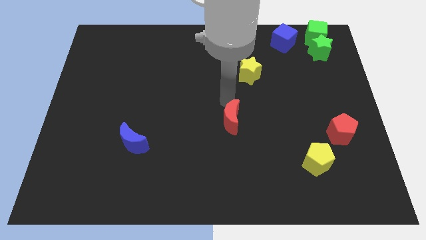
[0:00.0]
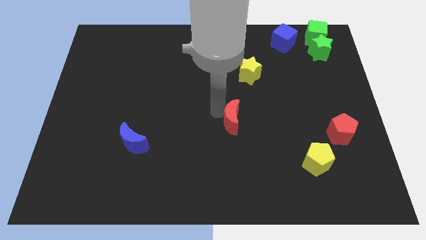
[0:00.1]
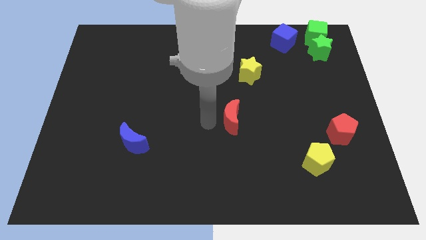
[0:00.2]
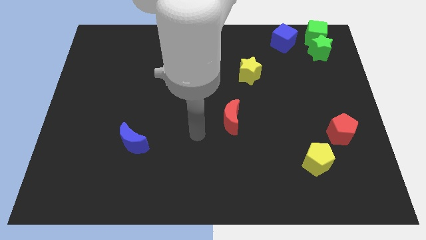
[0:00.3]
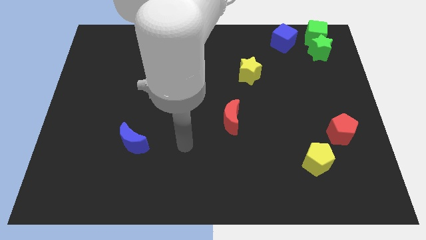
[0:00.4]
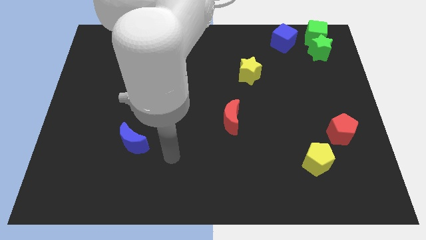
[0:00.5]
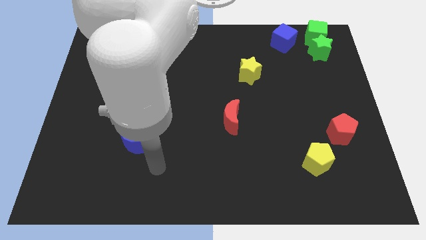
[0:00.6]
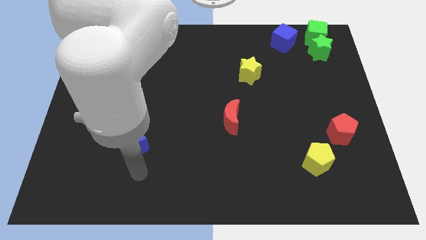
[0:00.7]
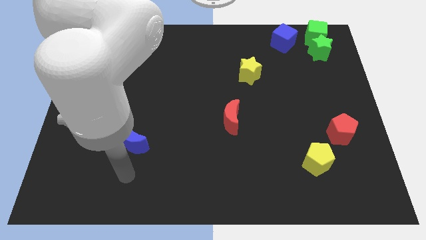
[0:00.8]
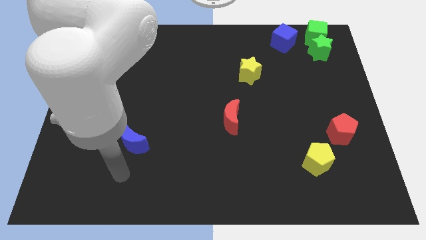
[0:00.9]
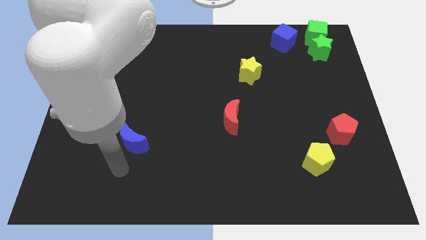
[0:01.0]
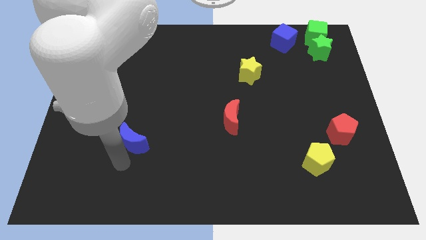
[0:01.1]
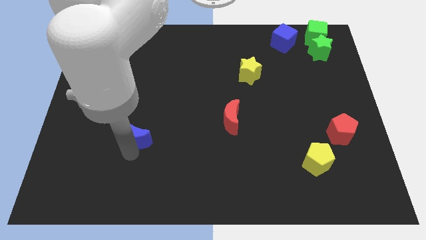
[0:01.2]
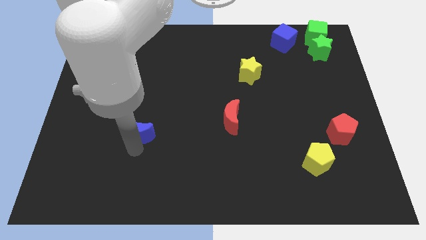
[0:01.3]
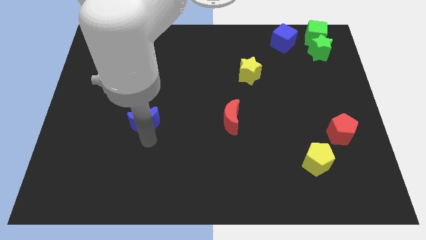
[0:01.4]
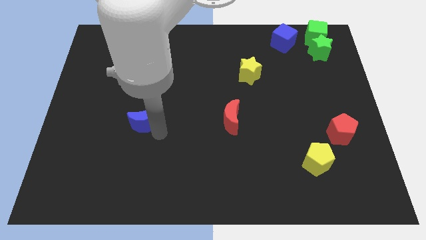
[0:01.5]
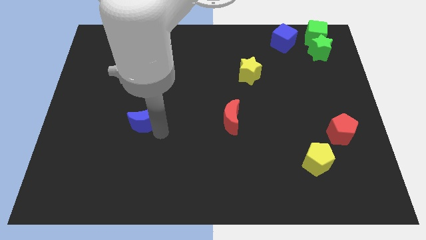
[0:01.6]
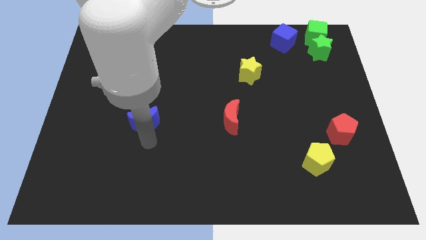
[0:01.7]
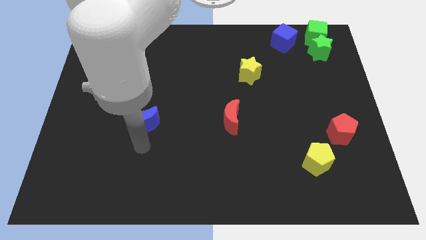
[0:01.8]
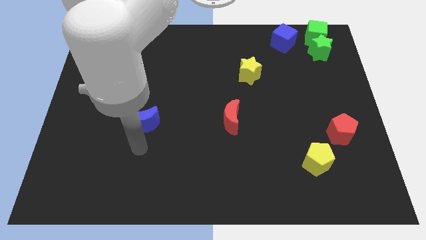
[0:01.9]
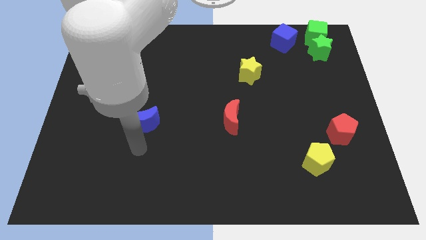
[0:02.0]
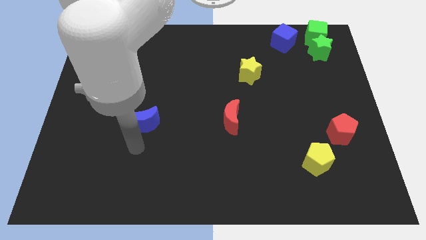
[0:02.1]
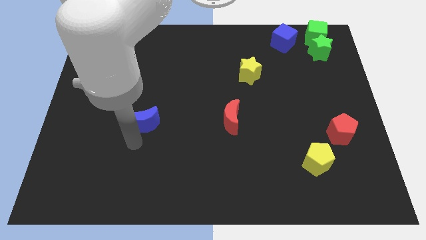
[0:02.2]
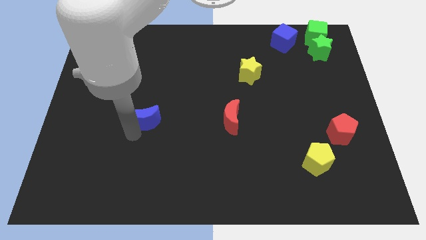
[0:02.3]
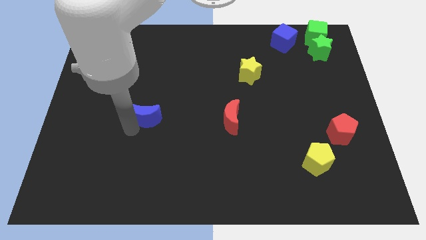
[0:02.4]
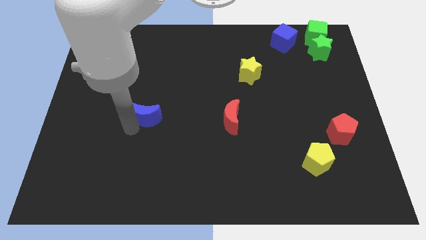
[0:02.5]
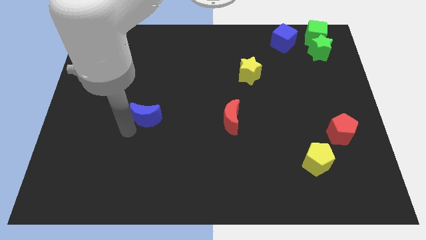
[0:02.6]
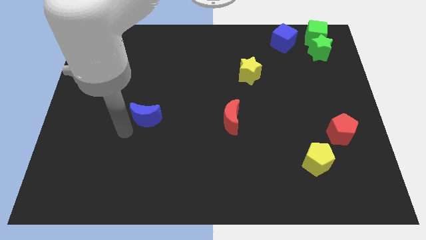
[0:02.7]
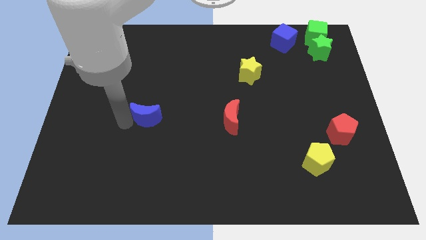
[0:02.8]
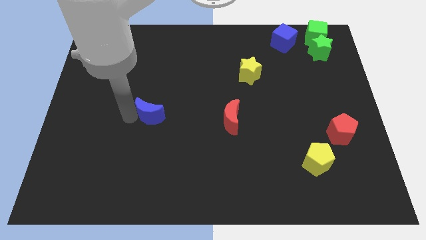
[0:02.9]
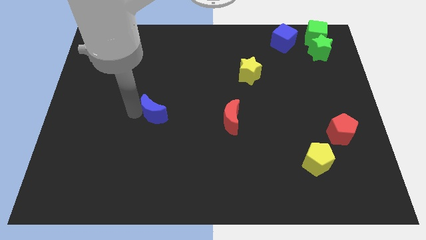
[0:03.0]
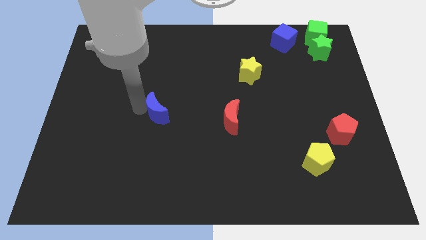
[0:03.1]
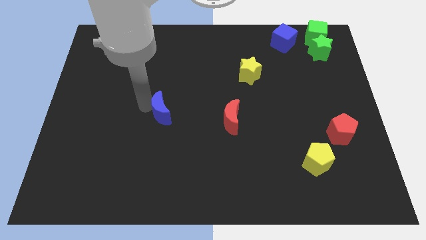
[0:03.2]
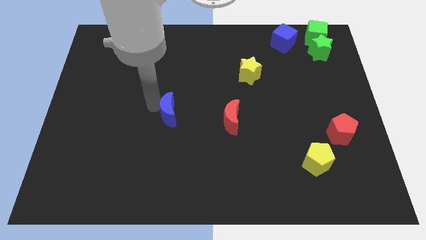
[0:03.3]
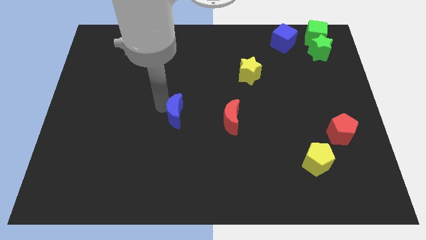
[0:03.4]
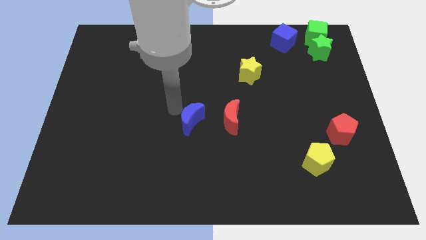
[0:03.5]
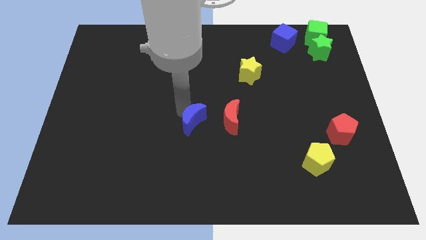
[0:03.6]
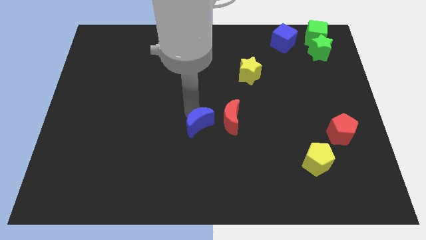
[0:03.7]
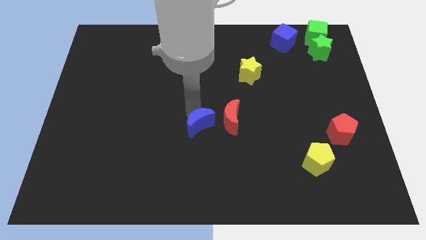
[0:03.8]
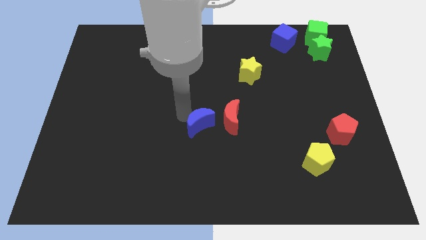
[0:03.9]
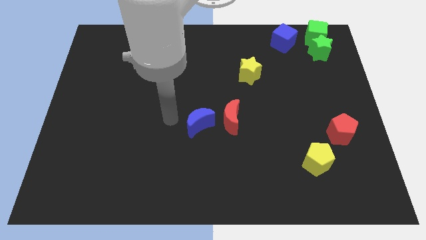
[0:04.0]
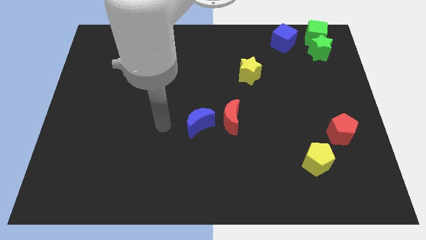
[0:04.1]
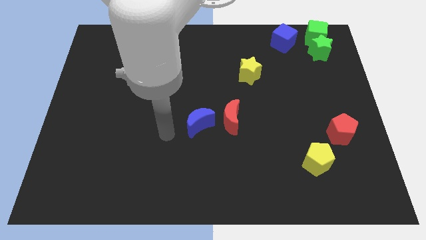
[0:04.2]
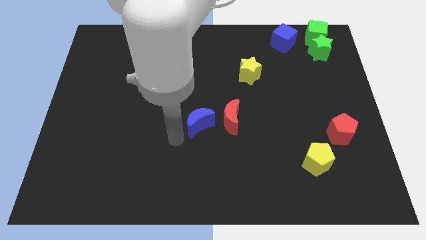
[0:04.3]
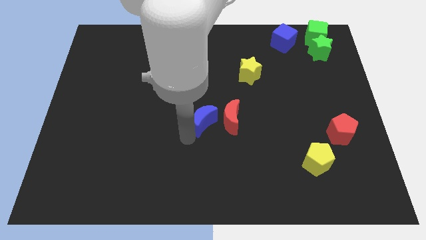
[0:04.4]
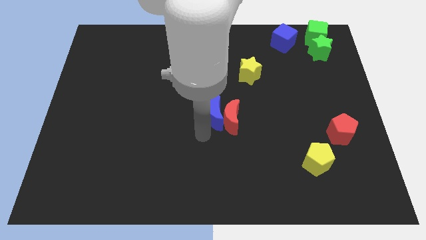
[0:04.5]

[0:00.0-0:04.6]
slide the blue moon into the red crescent

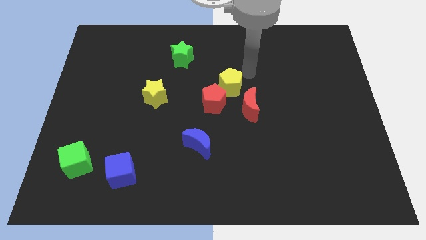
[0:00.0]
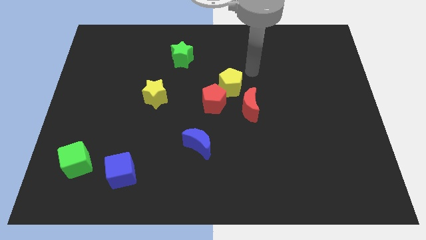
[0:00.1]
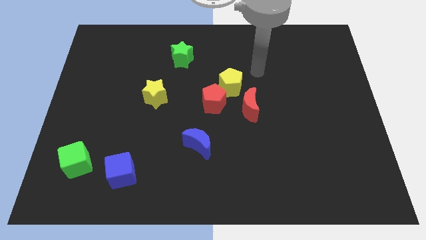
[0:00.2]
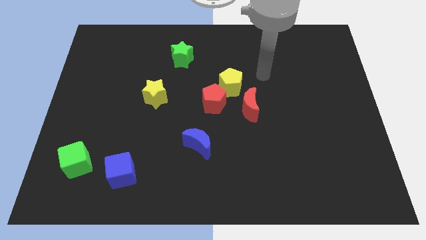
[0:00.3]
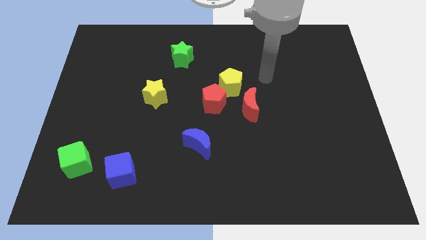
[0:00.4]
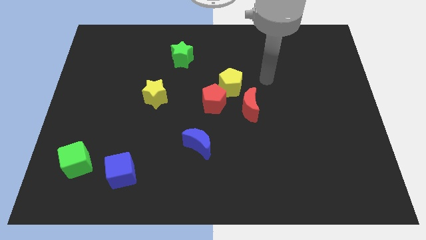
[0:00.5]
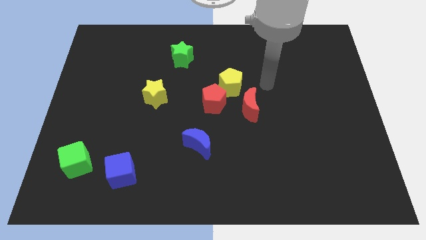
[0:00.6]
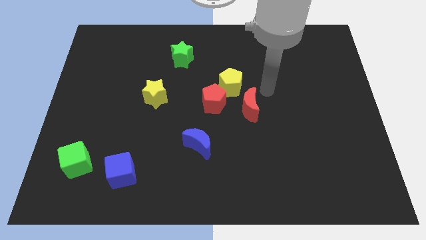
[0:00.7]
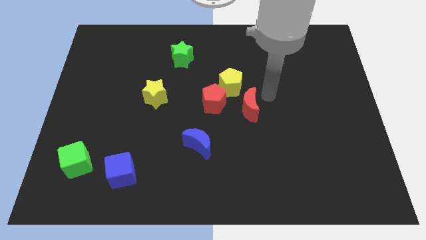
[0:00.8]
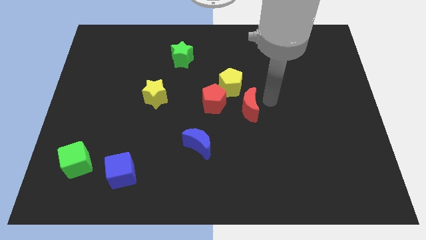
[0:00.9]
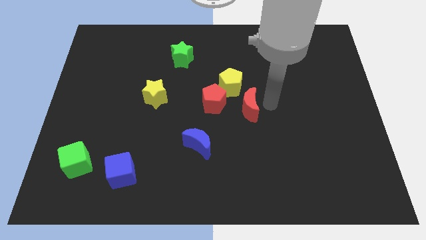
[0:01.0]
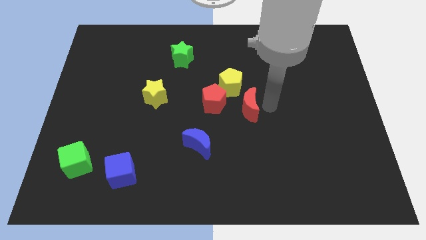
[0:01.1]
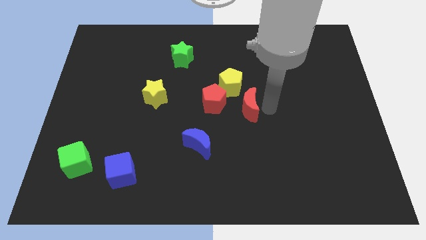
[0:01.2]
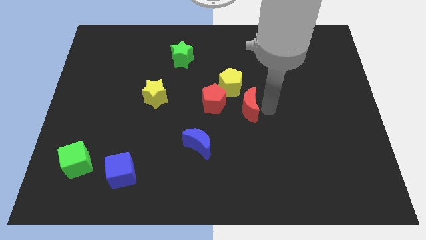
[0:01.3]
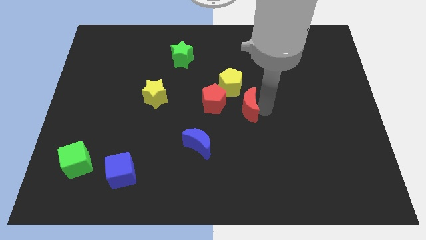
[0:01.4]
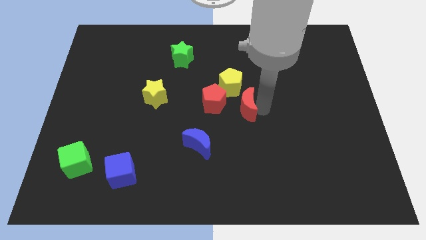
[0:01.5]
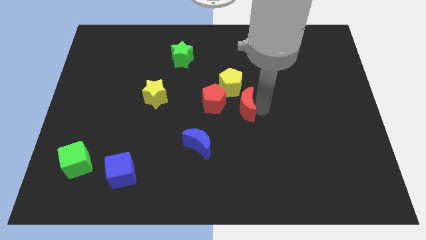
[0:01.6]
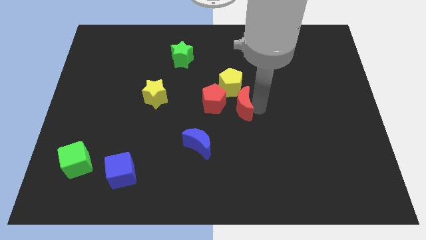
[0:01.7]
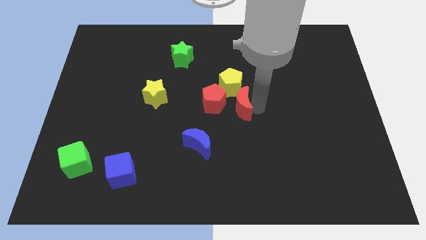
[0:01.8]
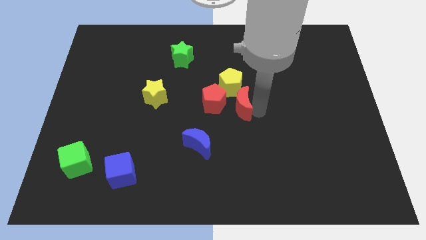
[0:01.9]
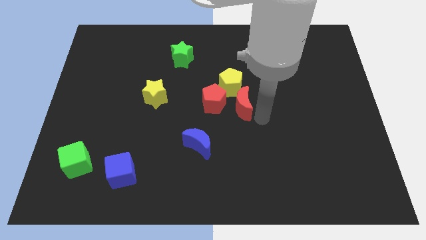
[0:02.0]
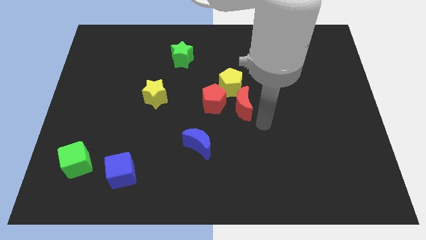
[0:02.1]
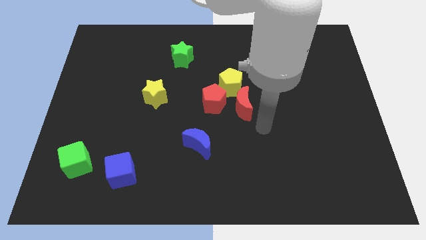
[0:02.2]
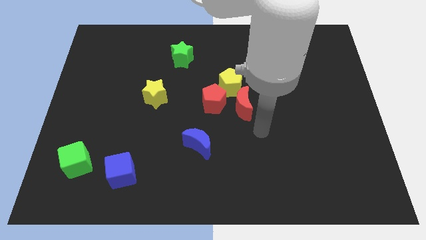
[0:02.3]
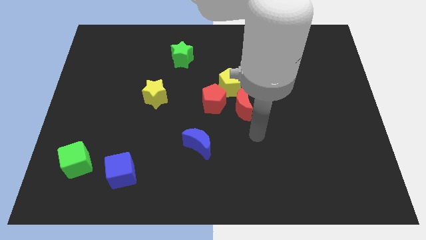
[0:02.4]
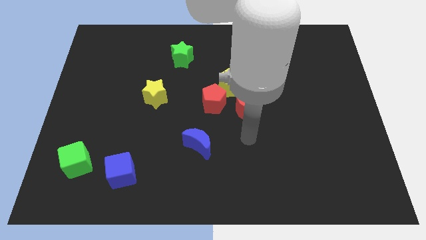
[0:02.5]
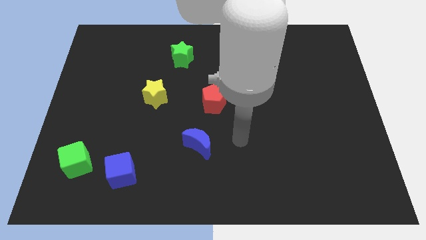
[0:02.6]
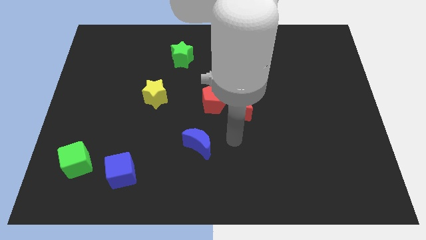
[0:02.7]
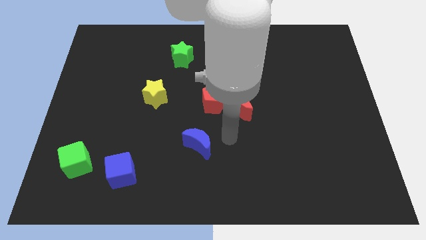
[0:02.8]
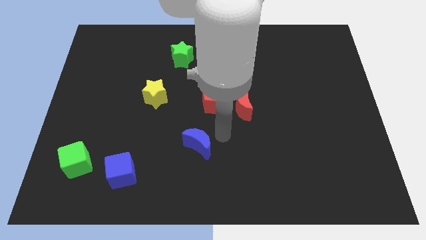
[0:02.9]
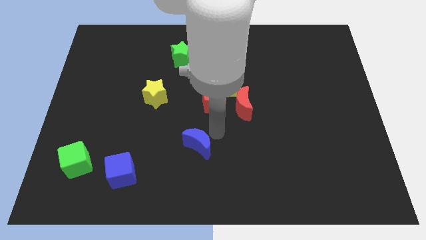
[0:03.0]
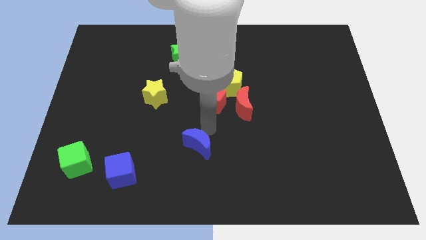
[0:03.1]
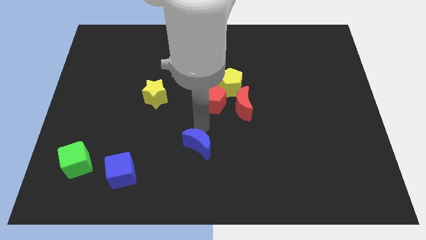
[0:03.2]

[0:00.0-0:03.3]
move the red crescent slightly to the yellow pentagon

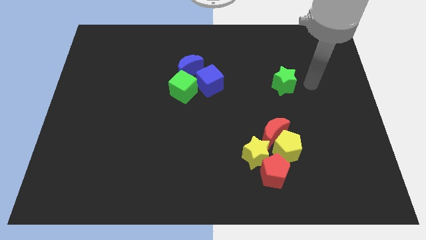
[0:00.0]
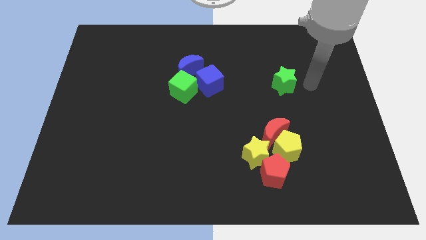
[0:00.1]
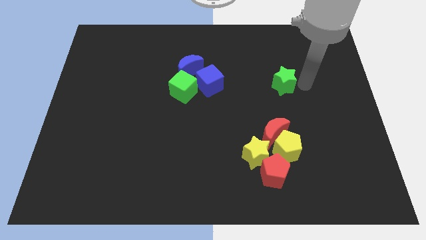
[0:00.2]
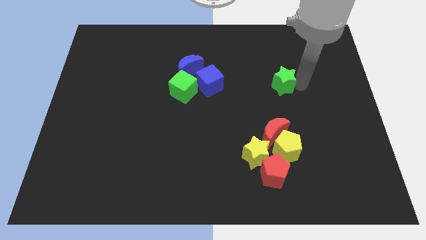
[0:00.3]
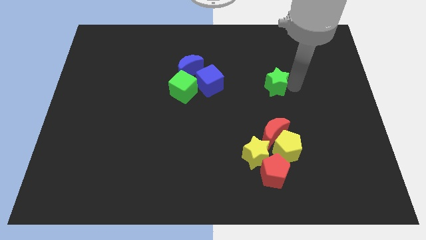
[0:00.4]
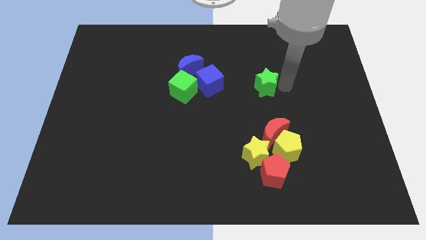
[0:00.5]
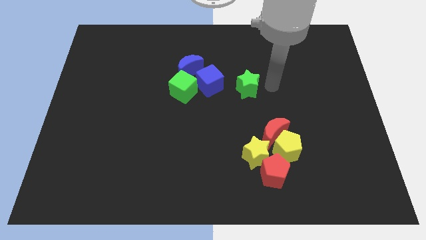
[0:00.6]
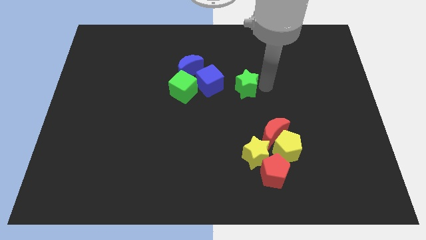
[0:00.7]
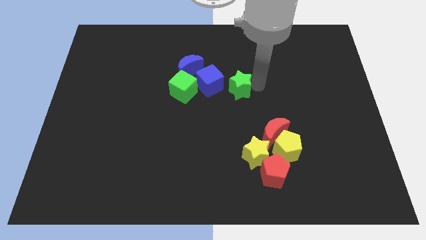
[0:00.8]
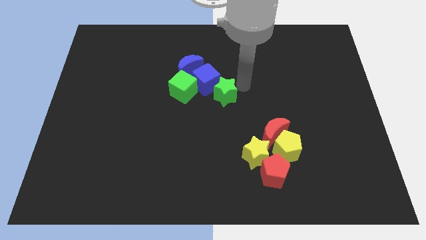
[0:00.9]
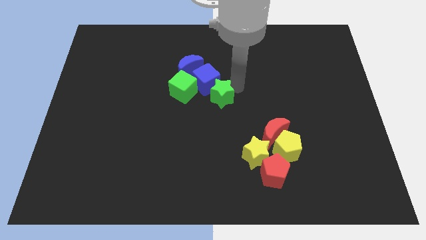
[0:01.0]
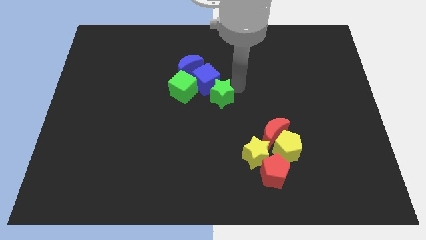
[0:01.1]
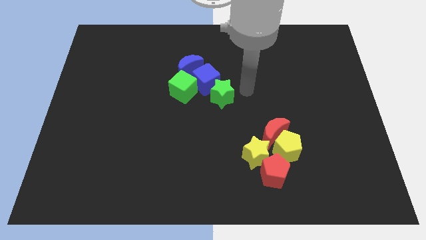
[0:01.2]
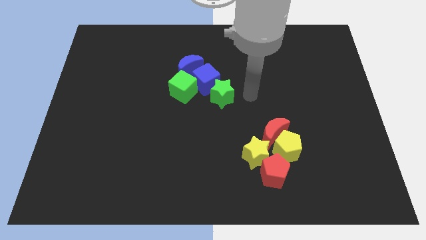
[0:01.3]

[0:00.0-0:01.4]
push green star into blue cube
